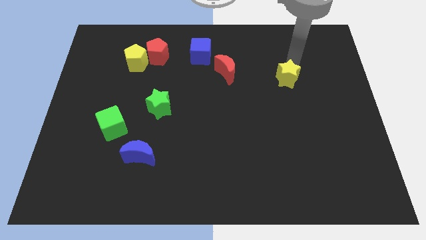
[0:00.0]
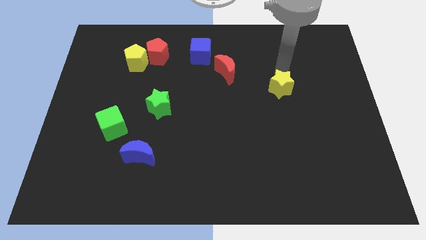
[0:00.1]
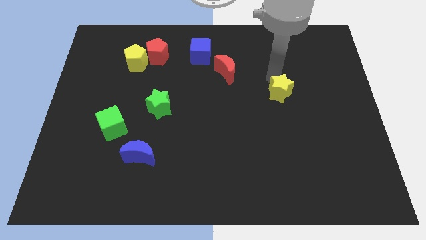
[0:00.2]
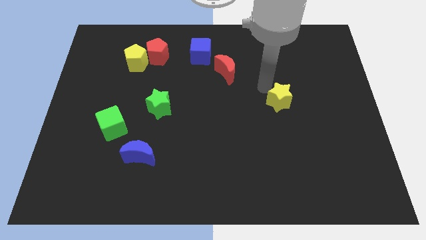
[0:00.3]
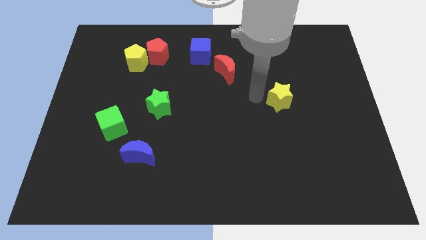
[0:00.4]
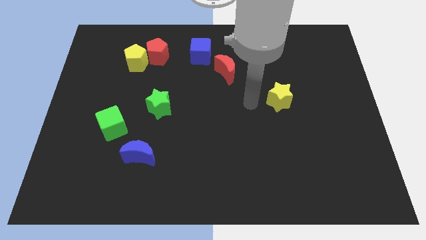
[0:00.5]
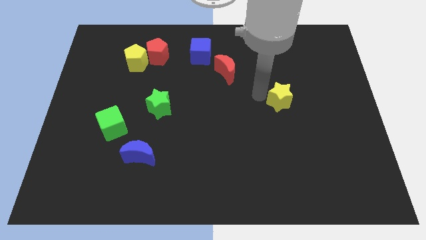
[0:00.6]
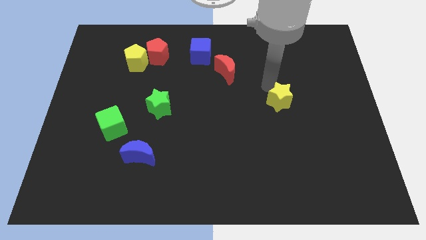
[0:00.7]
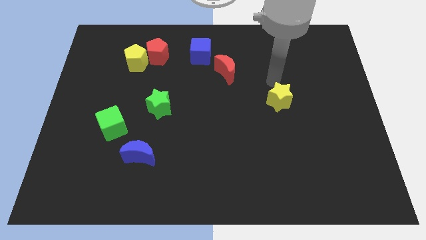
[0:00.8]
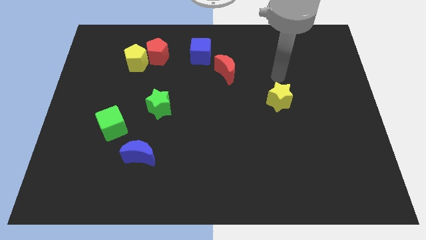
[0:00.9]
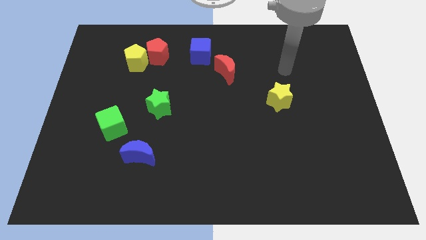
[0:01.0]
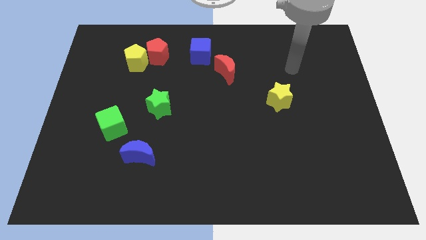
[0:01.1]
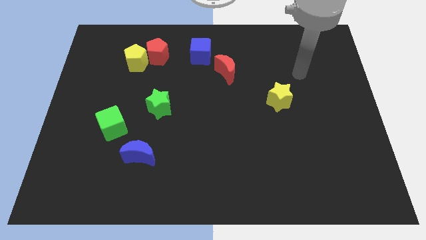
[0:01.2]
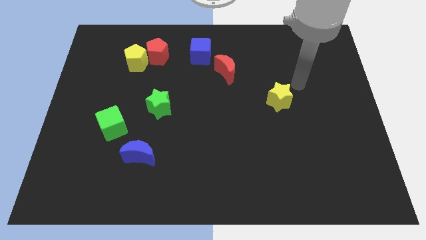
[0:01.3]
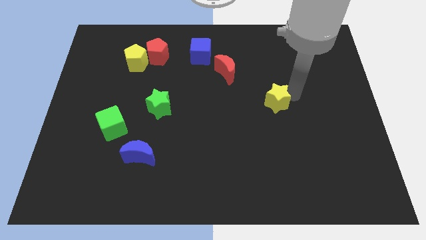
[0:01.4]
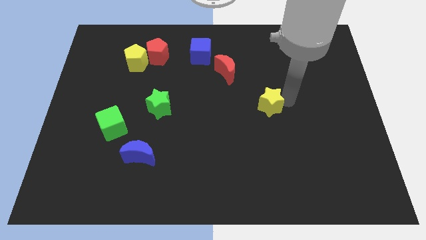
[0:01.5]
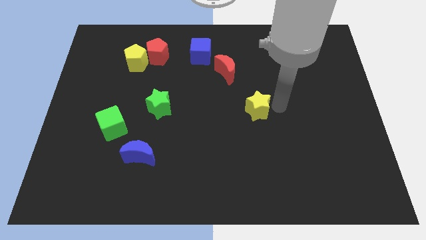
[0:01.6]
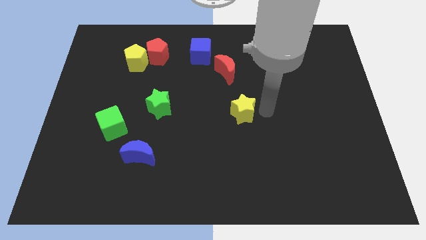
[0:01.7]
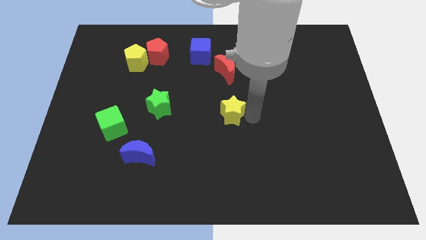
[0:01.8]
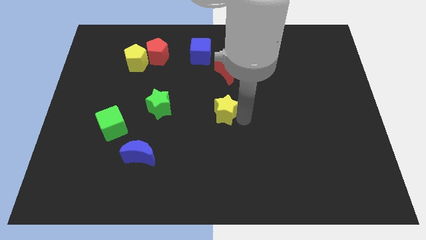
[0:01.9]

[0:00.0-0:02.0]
move the yellow star diagonal to the right of green star

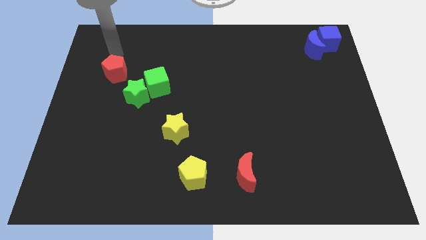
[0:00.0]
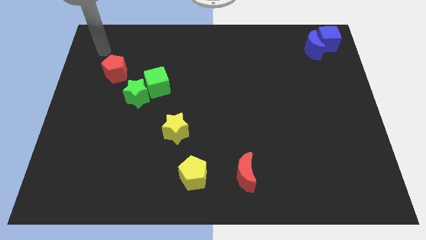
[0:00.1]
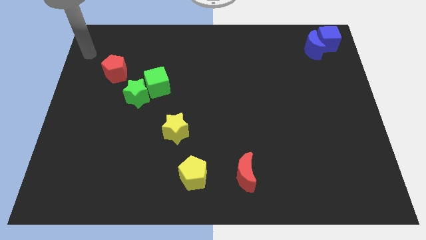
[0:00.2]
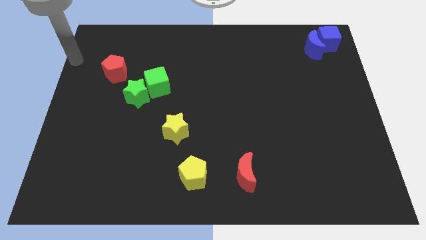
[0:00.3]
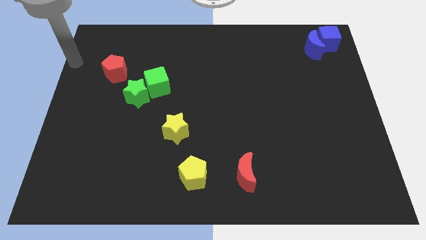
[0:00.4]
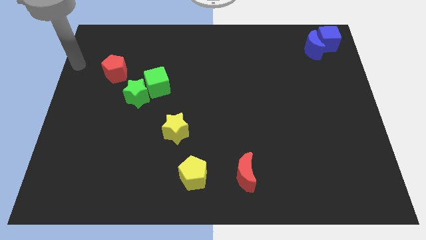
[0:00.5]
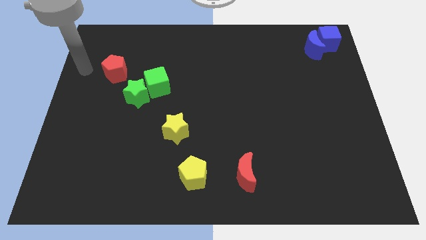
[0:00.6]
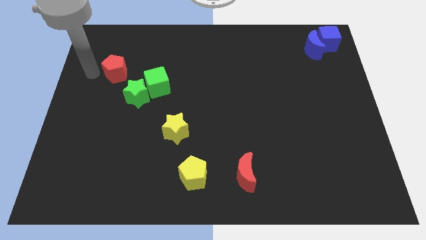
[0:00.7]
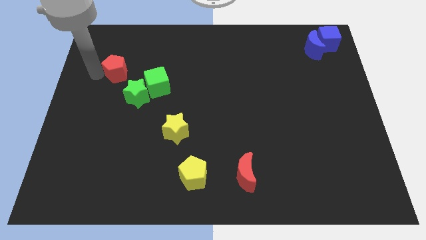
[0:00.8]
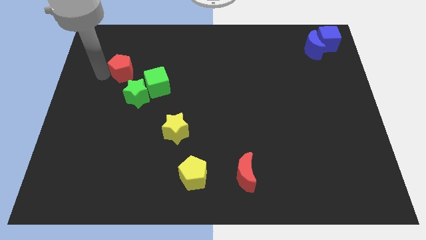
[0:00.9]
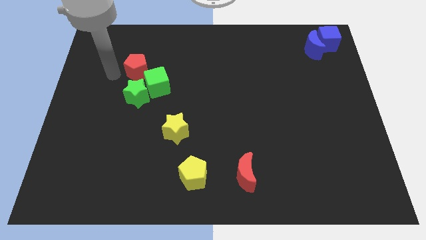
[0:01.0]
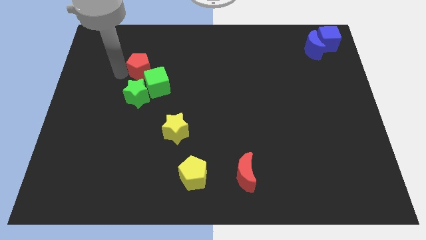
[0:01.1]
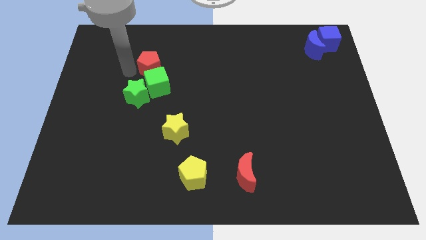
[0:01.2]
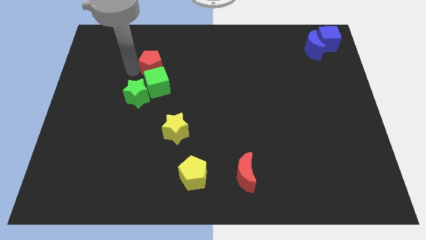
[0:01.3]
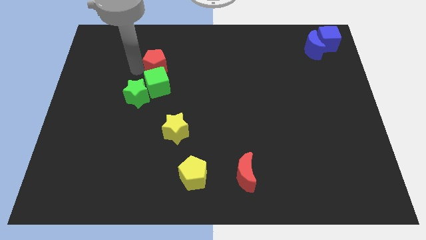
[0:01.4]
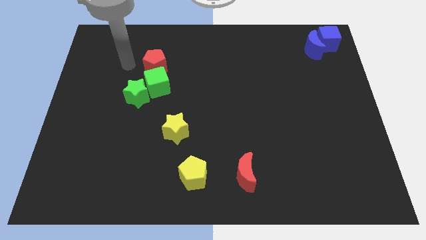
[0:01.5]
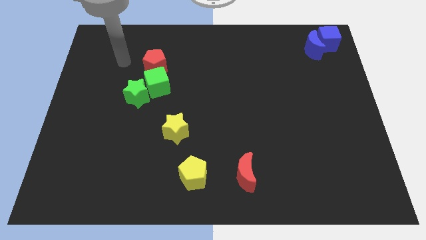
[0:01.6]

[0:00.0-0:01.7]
place red pentagon above green cube

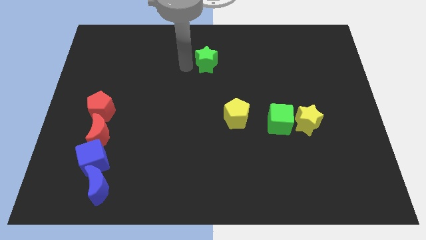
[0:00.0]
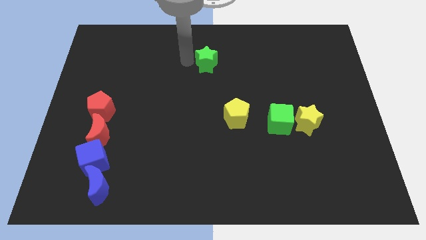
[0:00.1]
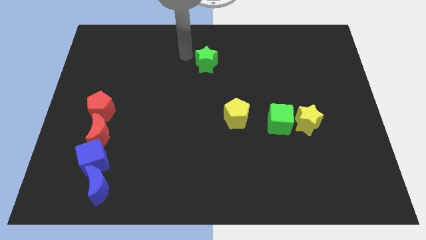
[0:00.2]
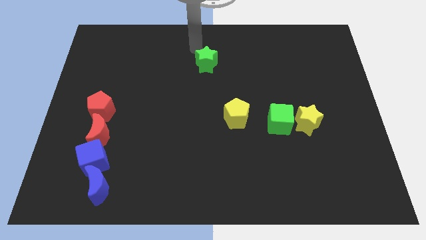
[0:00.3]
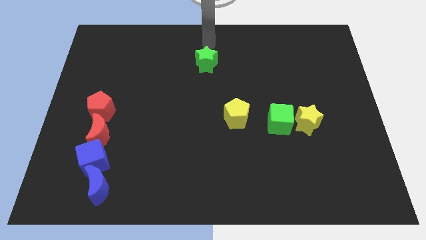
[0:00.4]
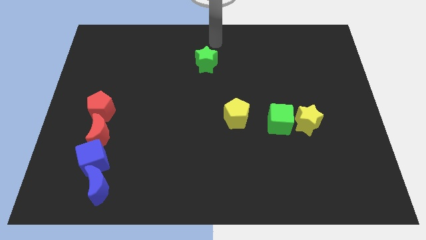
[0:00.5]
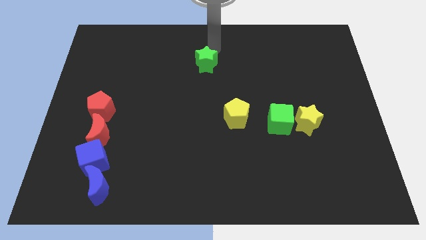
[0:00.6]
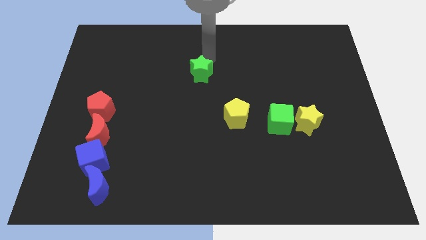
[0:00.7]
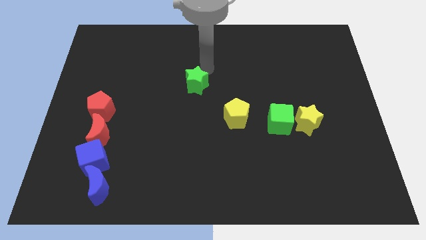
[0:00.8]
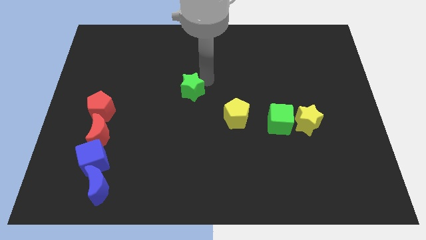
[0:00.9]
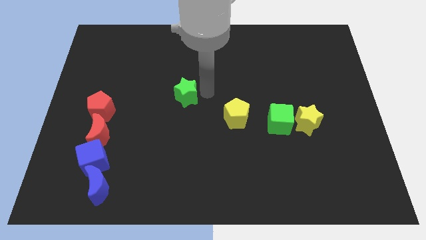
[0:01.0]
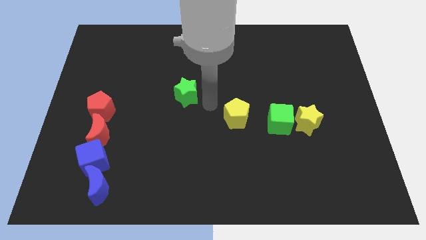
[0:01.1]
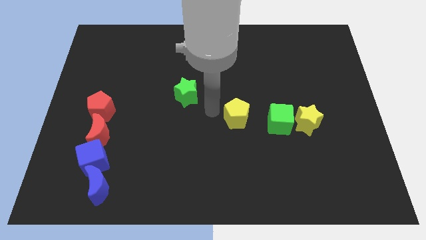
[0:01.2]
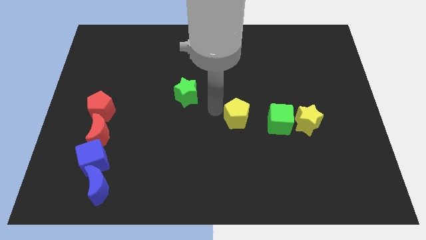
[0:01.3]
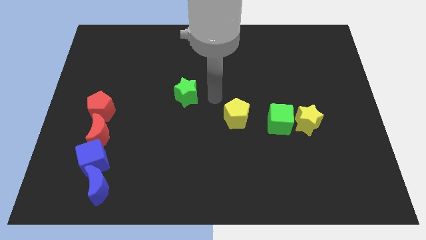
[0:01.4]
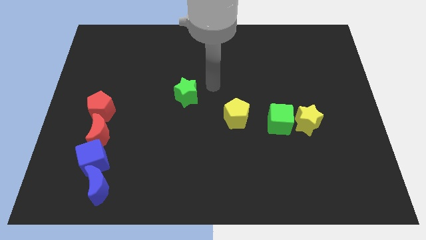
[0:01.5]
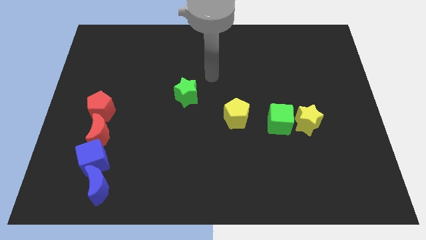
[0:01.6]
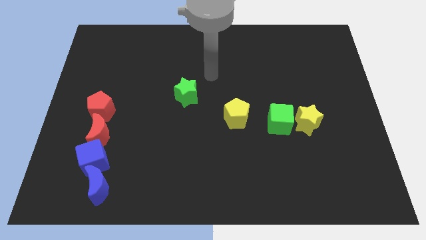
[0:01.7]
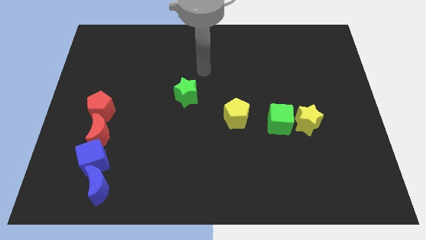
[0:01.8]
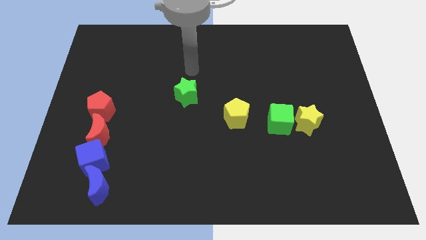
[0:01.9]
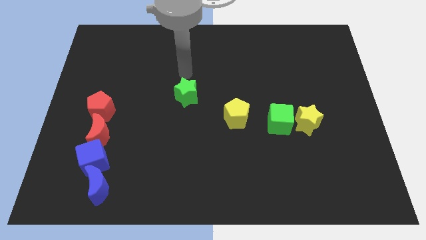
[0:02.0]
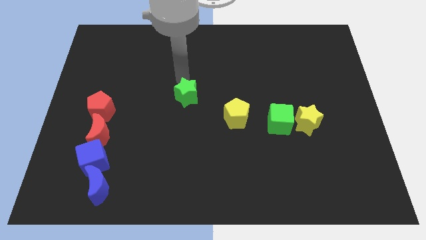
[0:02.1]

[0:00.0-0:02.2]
move the green star diagonal to the yellow pentagon

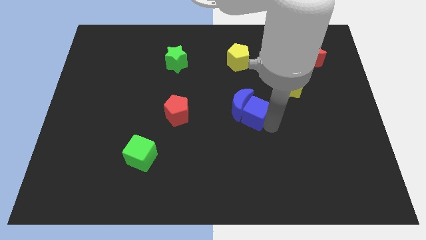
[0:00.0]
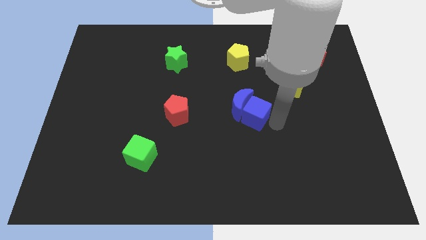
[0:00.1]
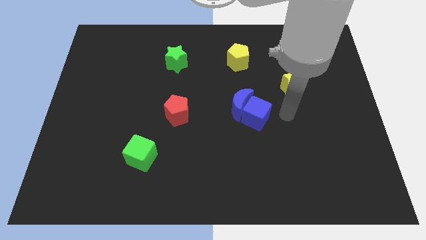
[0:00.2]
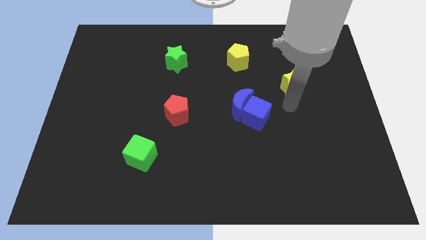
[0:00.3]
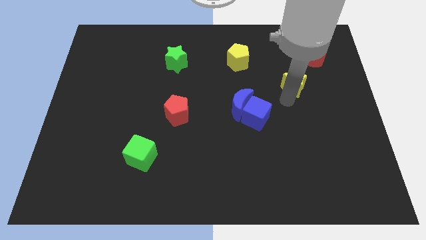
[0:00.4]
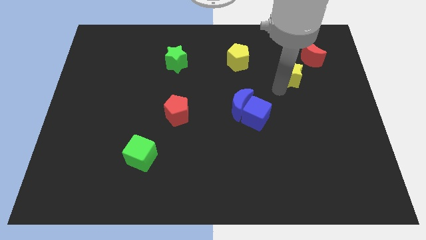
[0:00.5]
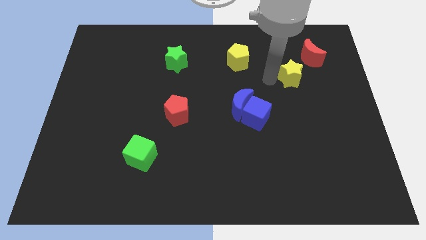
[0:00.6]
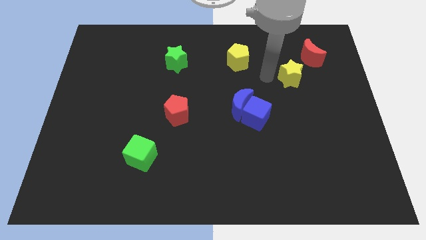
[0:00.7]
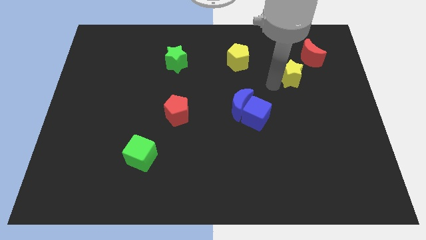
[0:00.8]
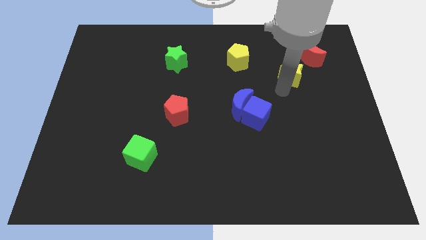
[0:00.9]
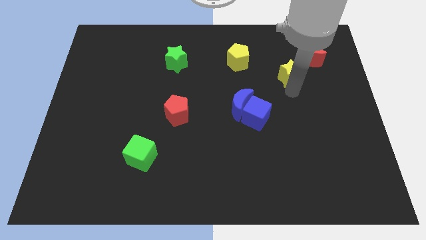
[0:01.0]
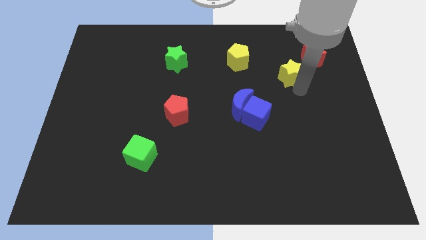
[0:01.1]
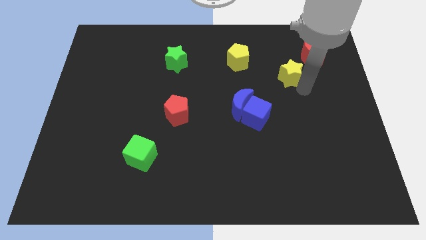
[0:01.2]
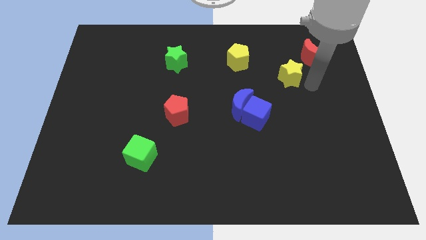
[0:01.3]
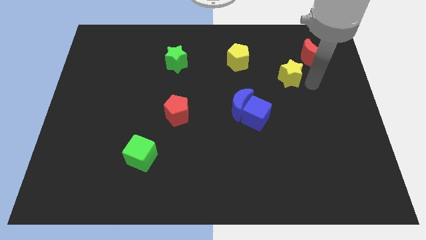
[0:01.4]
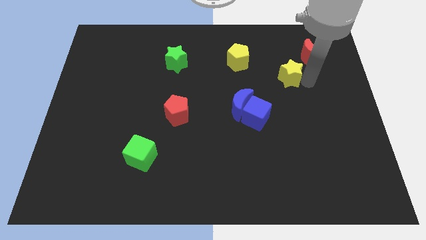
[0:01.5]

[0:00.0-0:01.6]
place your arm at the right of the yellow star

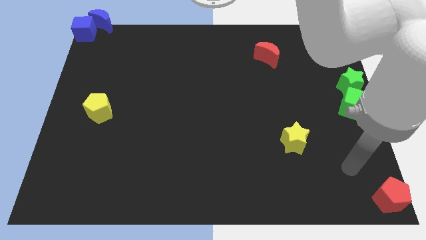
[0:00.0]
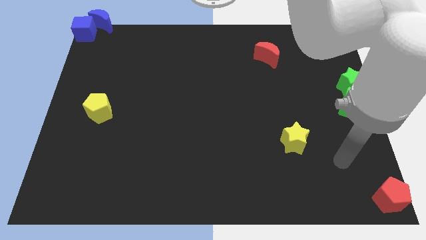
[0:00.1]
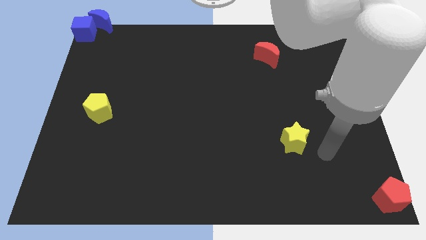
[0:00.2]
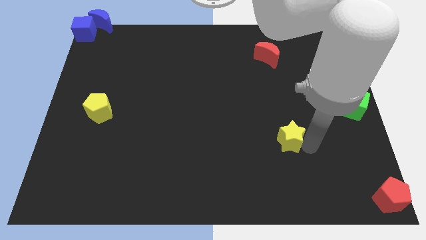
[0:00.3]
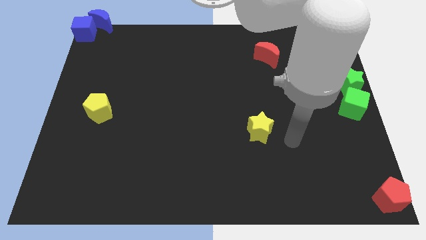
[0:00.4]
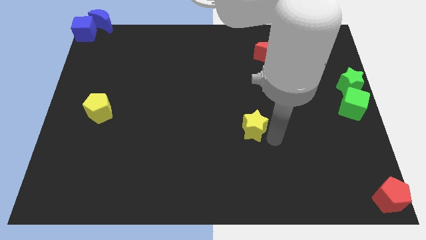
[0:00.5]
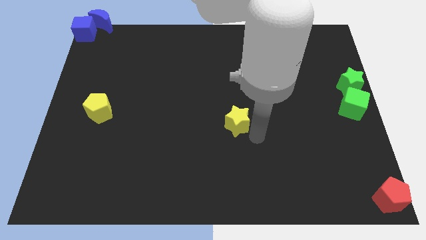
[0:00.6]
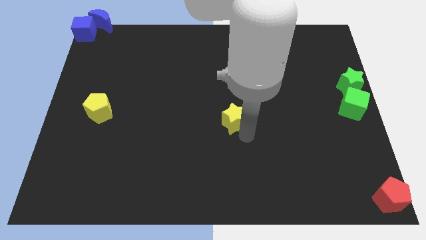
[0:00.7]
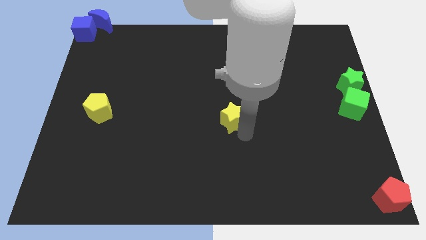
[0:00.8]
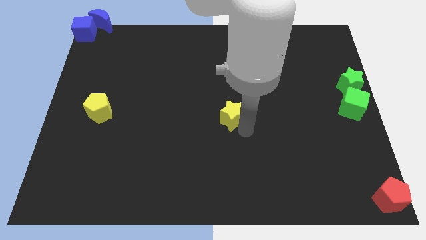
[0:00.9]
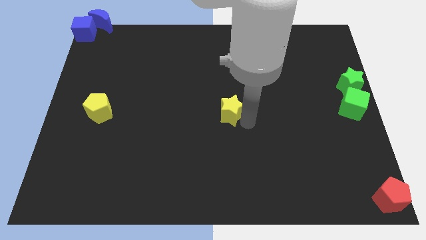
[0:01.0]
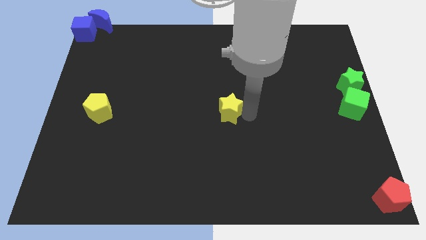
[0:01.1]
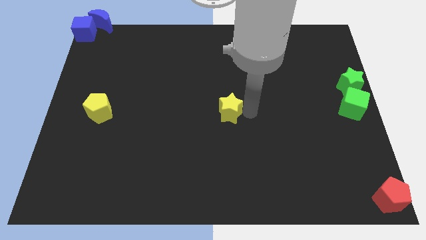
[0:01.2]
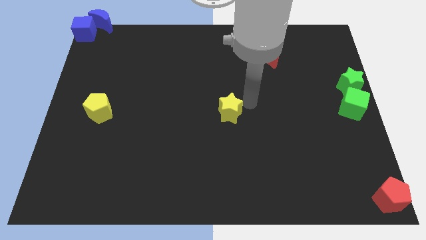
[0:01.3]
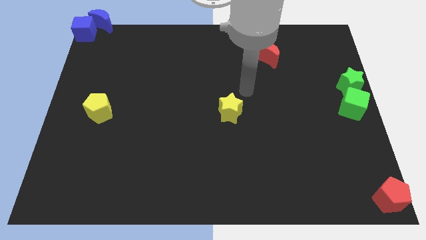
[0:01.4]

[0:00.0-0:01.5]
move the yellow star towards the center of the board

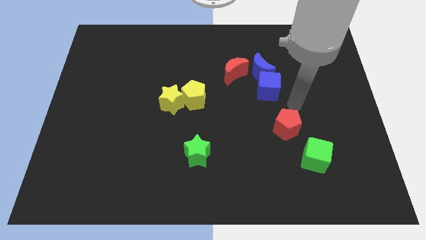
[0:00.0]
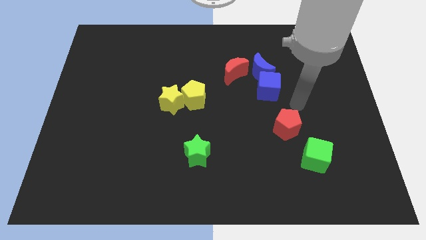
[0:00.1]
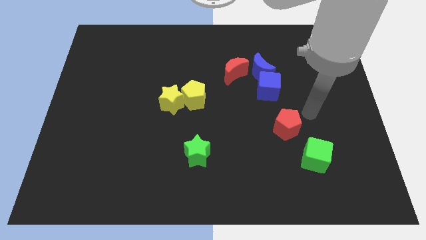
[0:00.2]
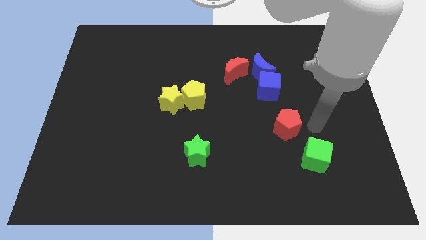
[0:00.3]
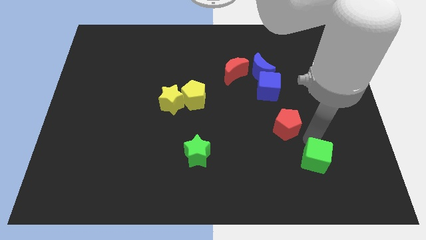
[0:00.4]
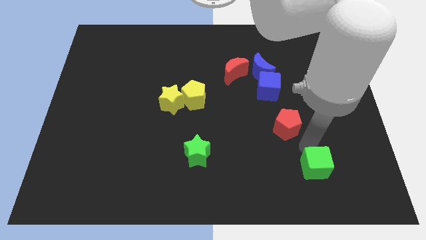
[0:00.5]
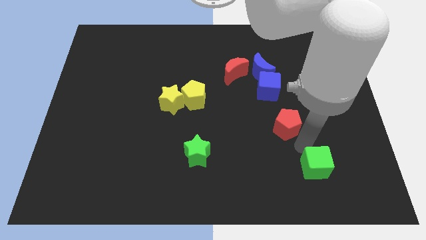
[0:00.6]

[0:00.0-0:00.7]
slightly push the green cube to the bottom of the board
